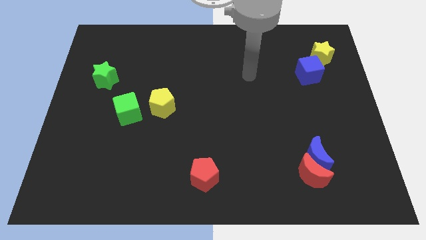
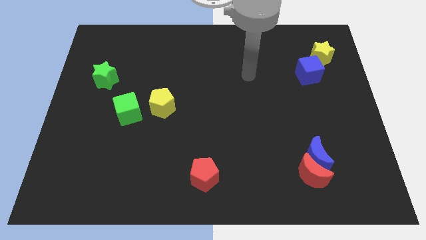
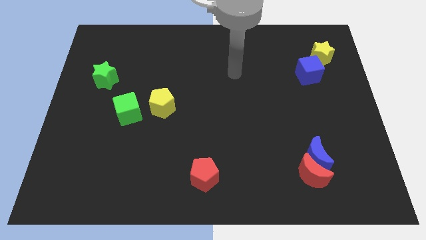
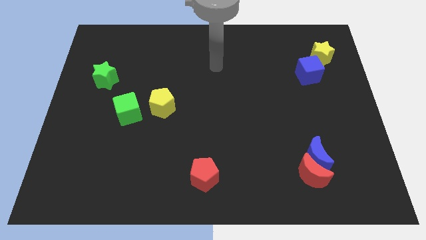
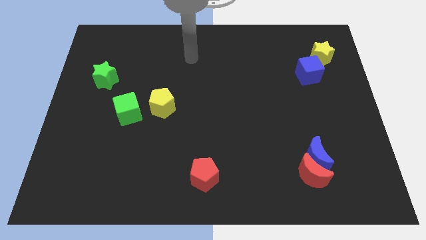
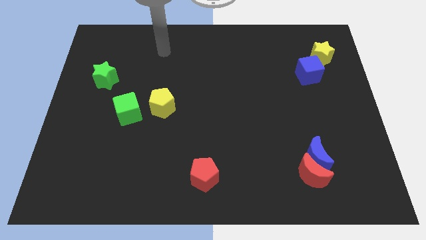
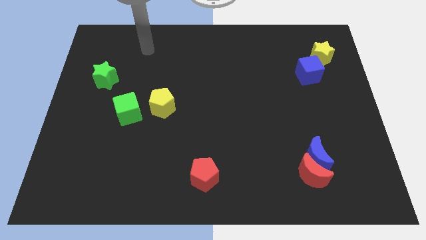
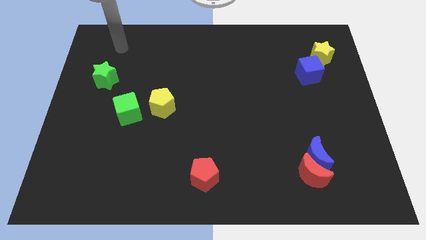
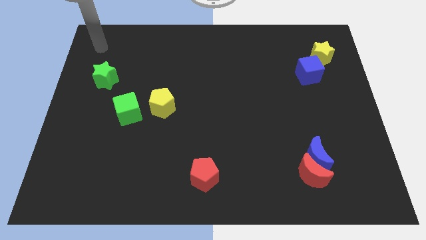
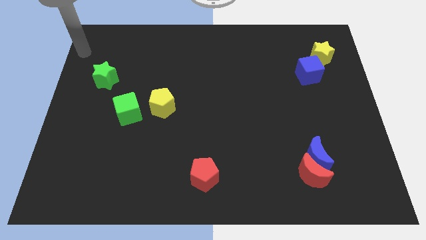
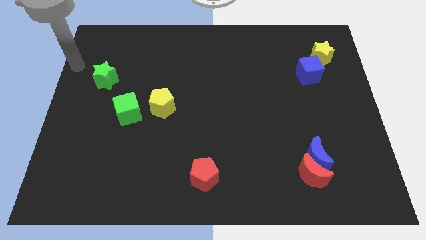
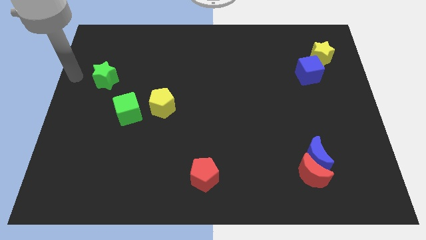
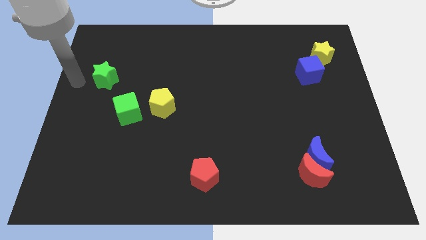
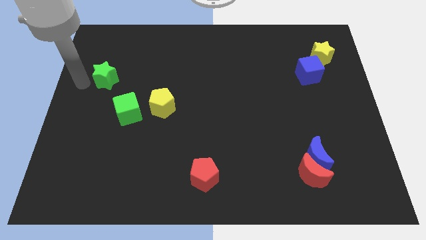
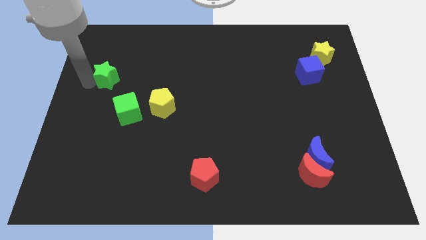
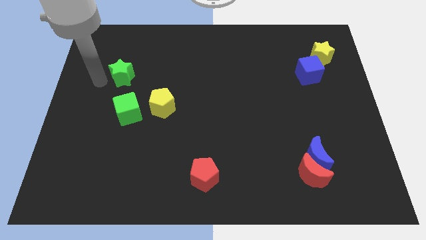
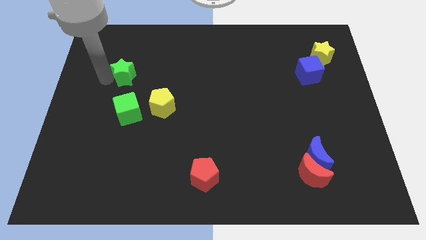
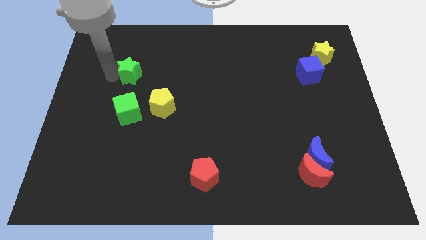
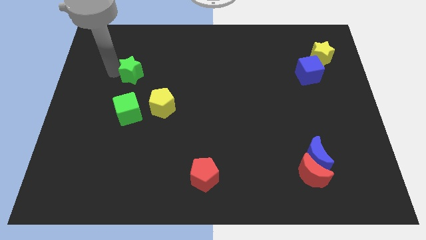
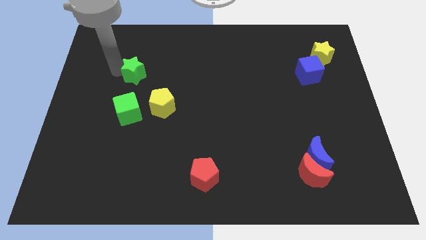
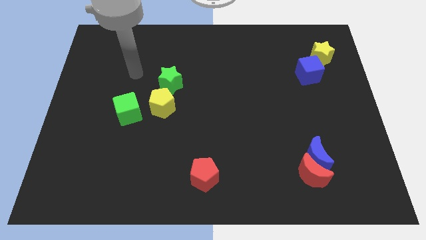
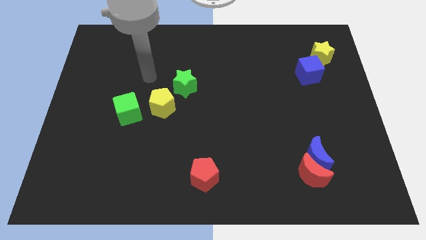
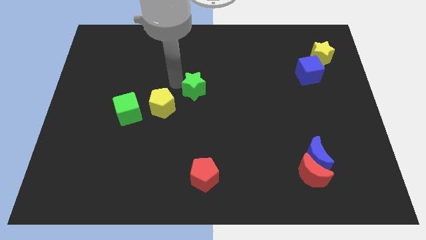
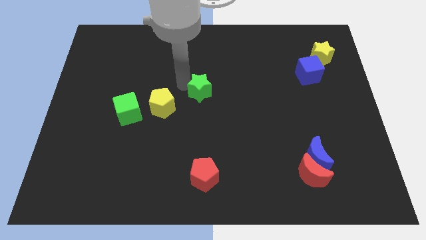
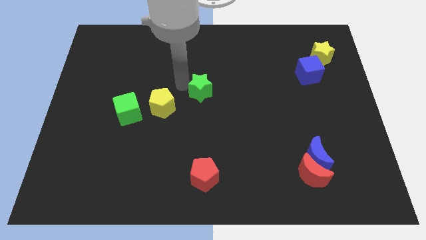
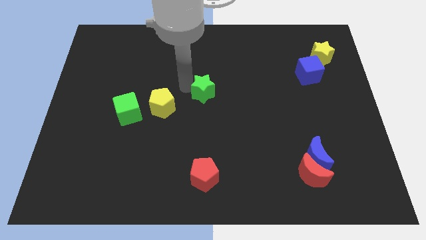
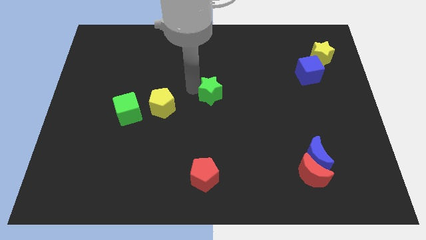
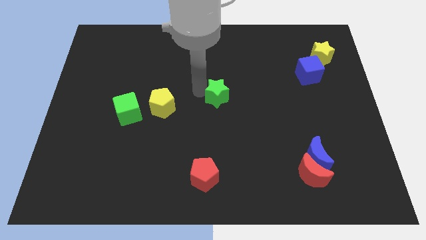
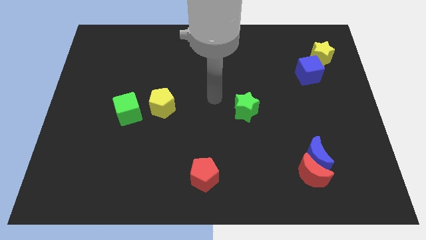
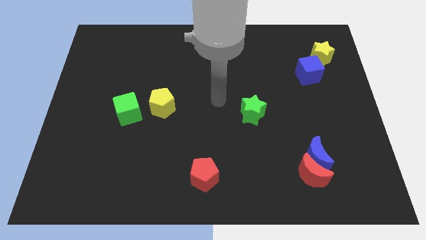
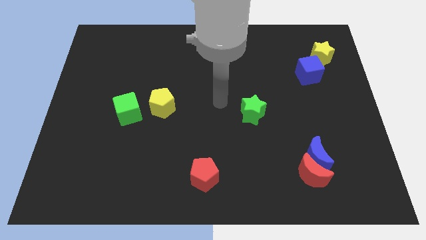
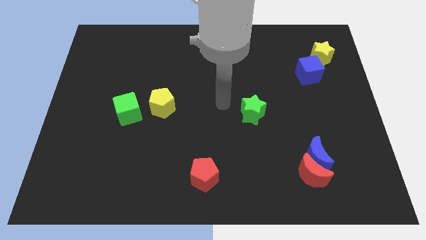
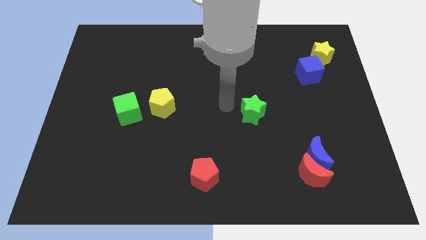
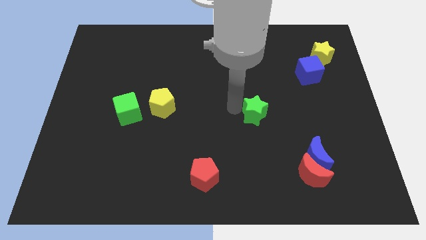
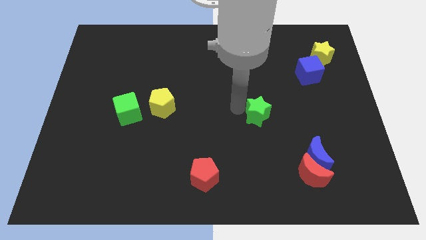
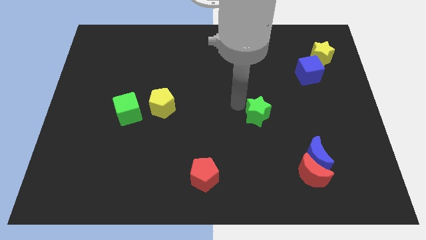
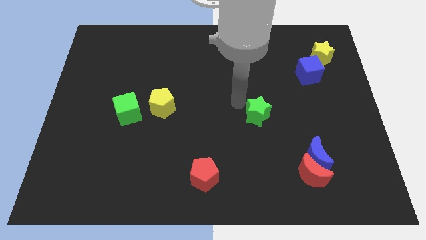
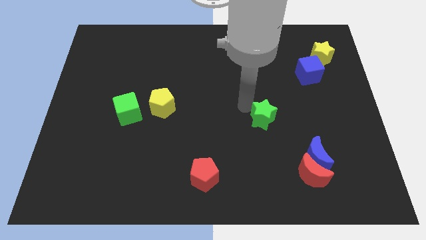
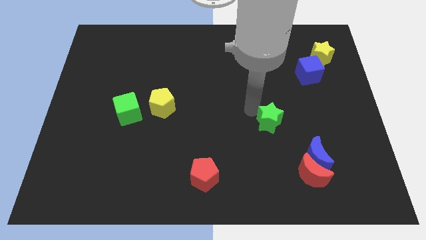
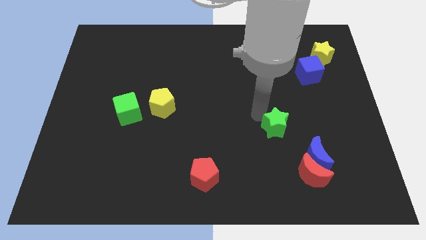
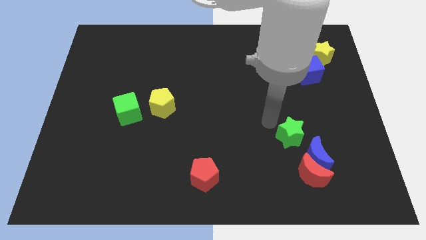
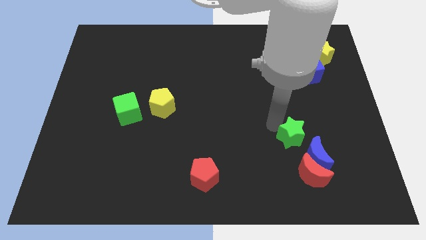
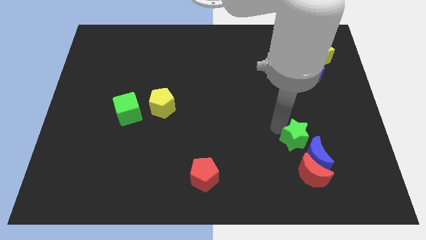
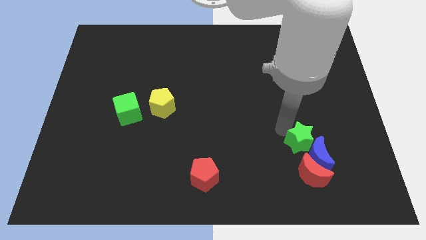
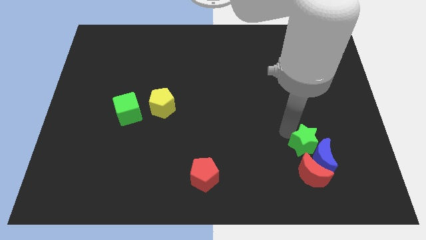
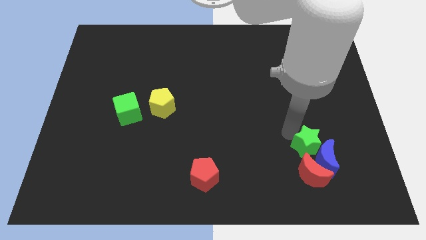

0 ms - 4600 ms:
push the green star next to the blue moon

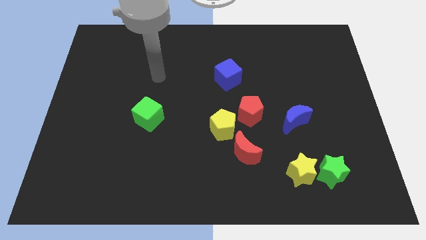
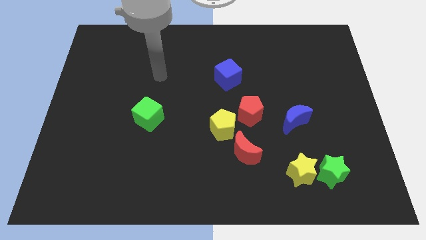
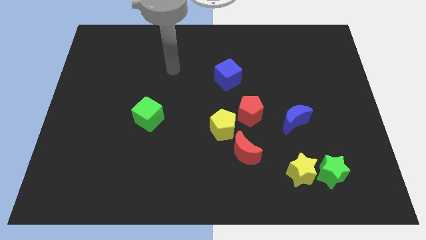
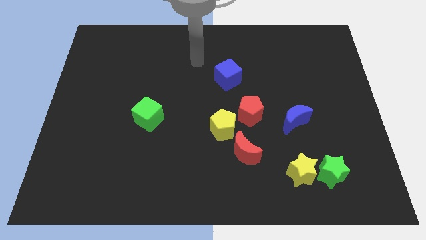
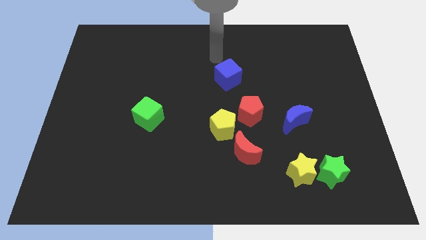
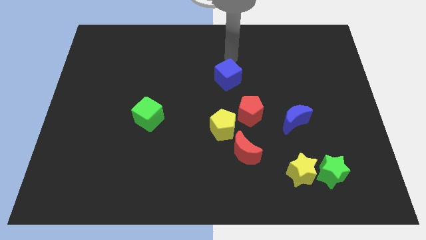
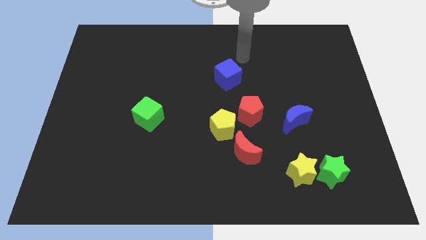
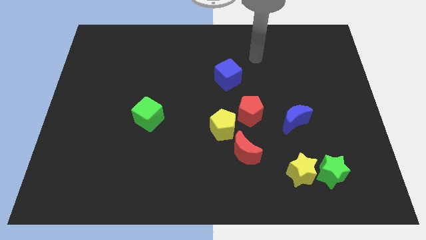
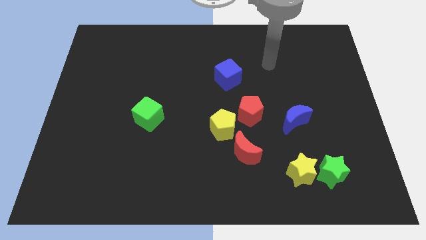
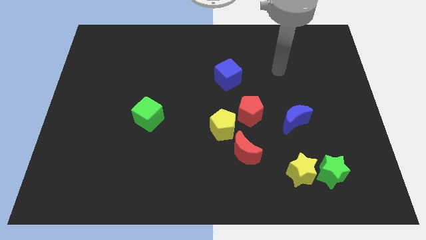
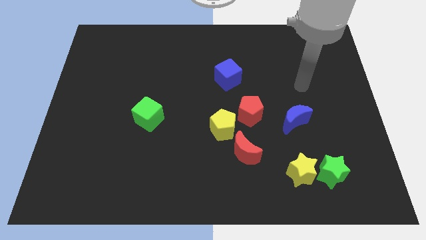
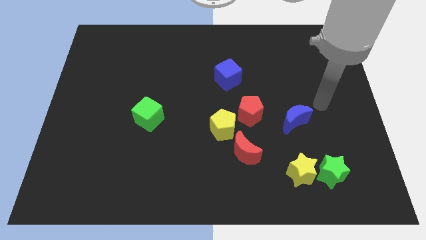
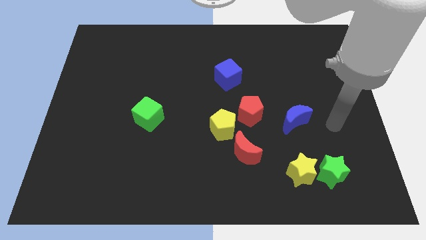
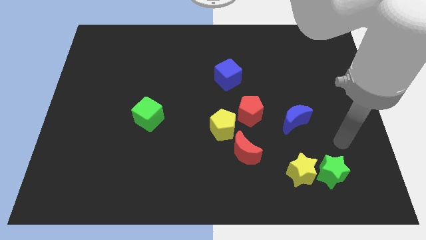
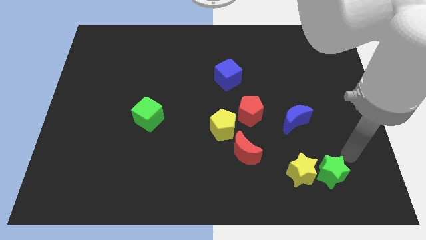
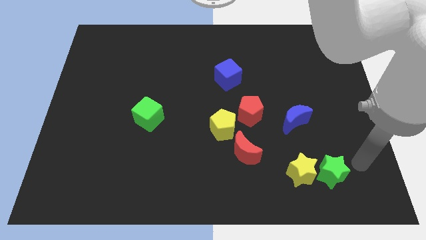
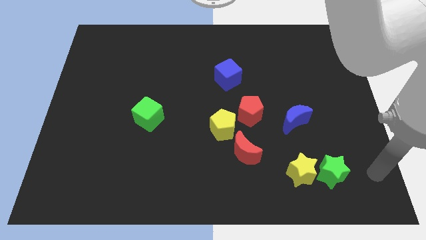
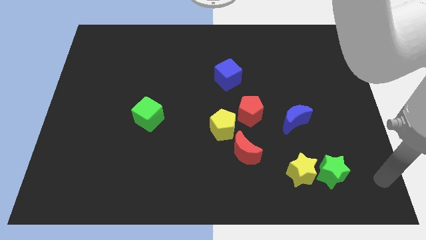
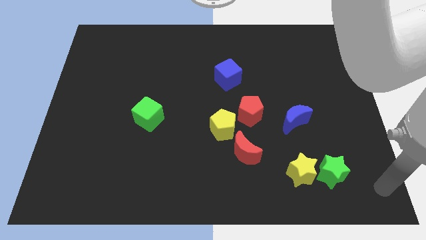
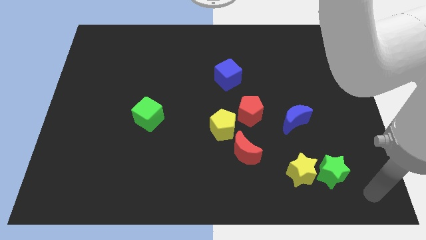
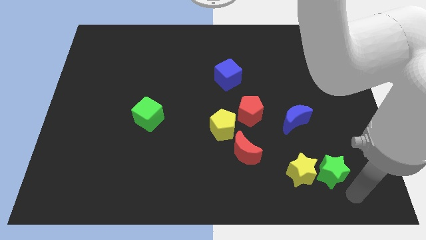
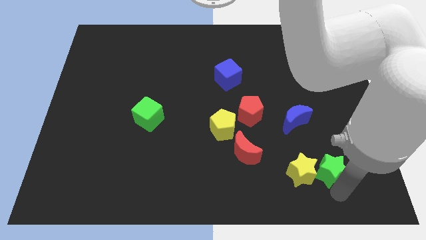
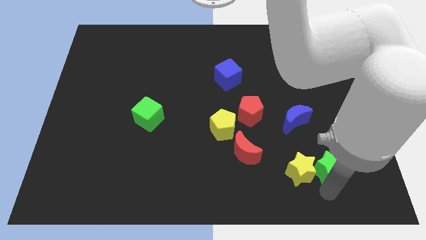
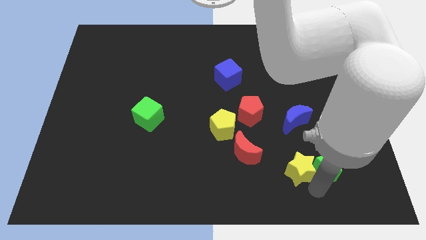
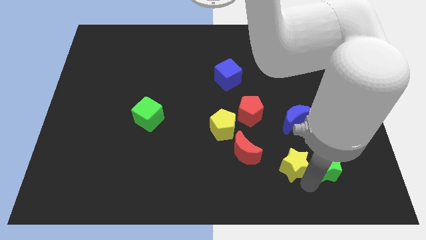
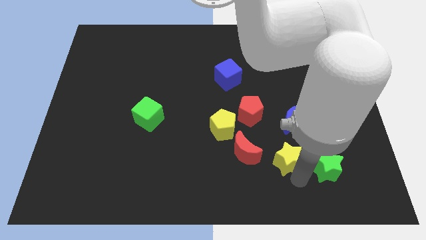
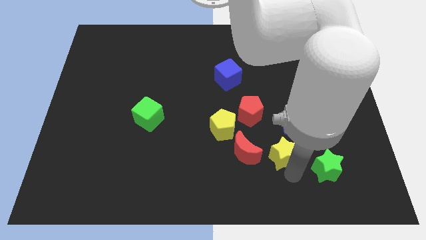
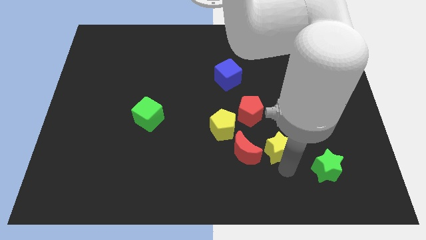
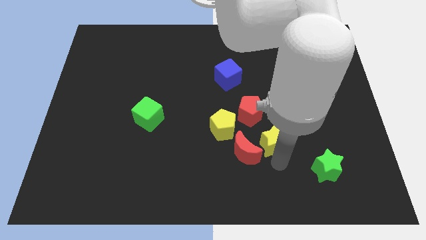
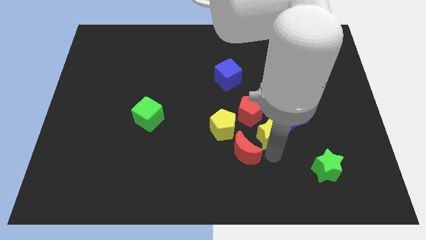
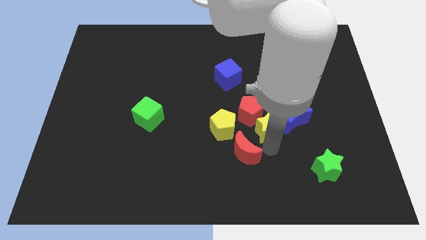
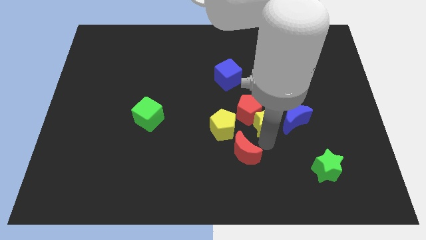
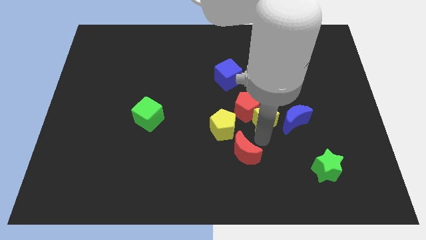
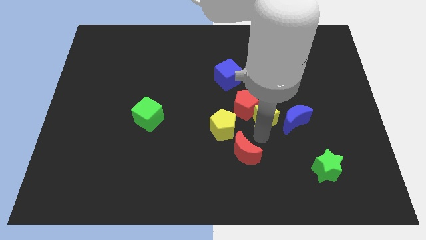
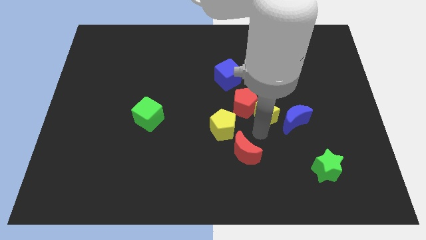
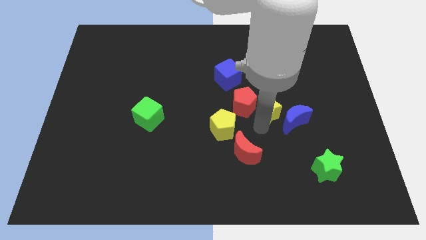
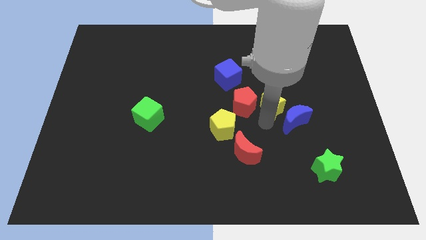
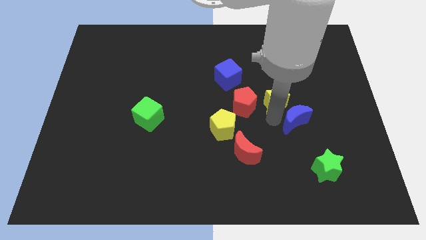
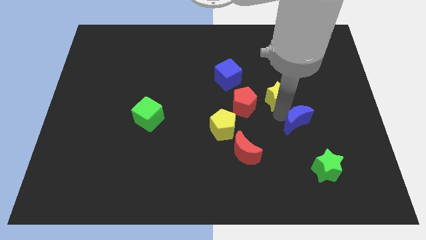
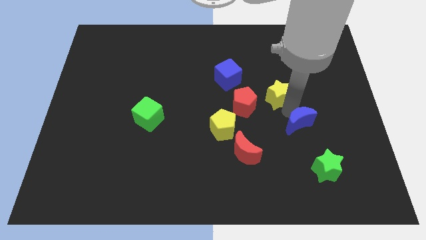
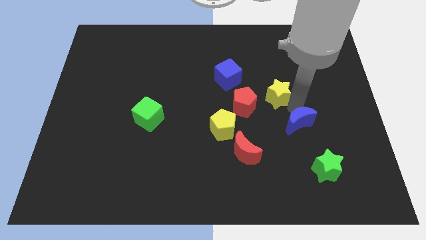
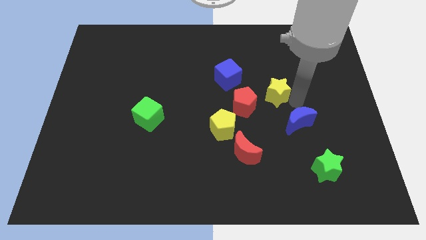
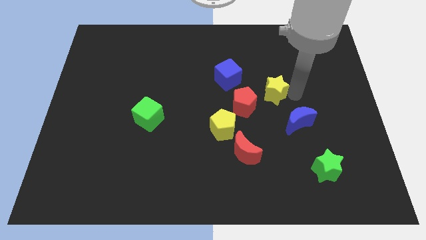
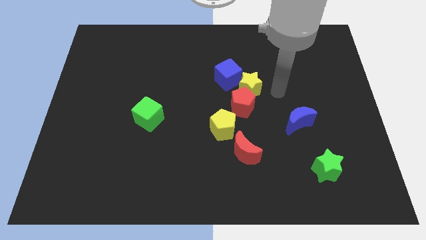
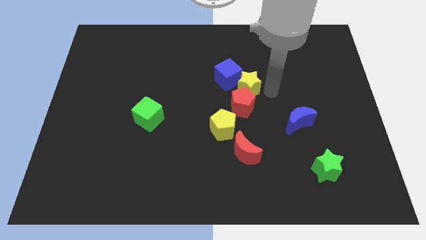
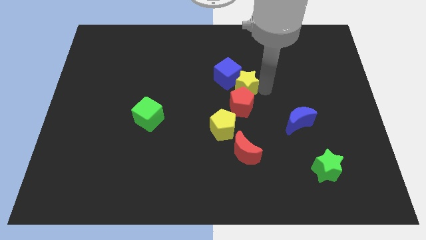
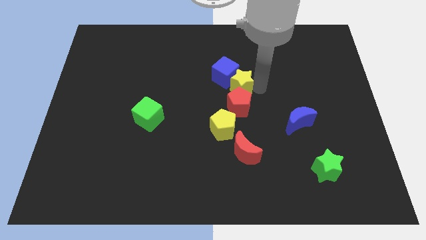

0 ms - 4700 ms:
slide the yellow star close to the blue cube
